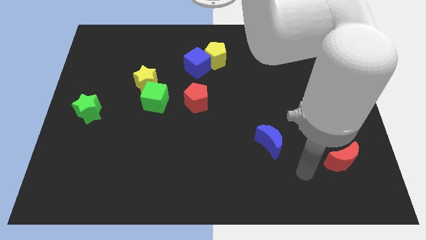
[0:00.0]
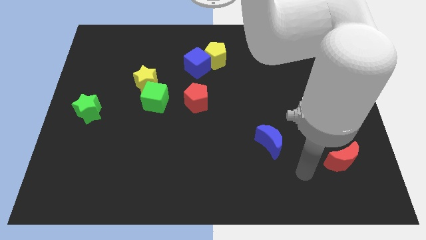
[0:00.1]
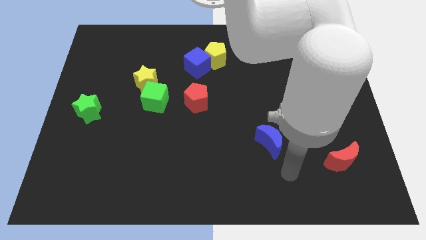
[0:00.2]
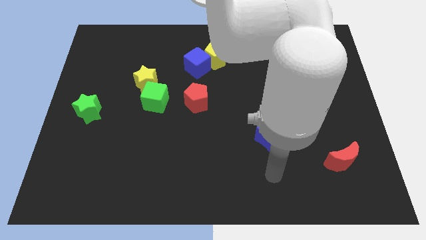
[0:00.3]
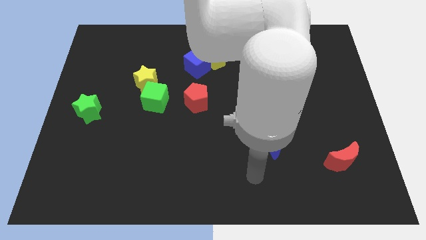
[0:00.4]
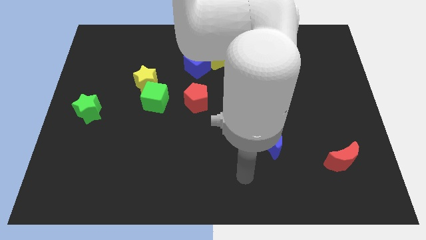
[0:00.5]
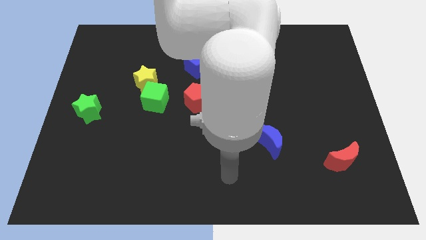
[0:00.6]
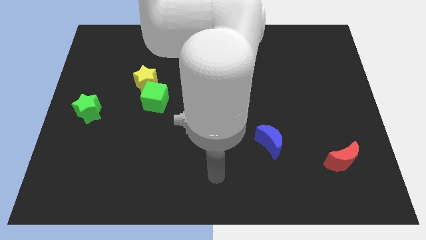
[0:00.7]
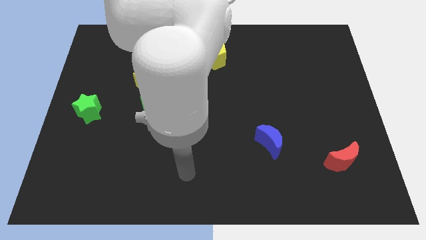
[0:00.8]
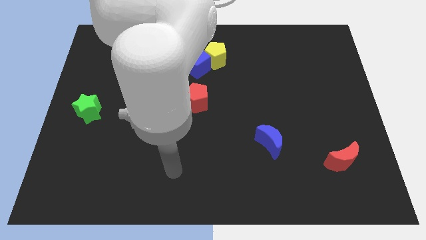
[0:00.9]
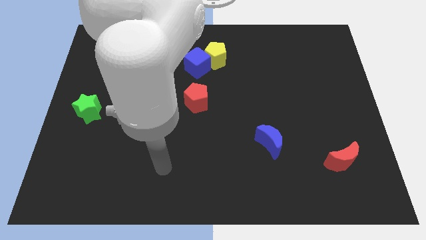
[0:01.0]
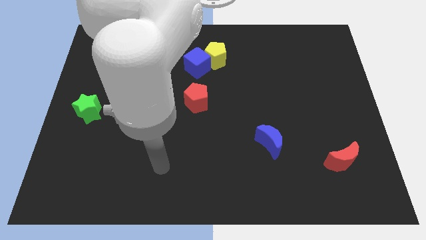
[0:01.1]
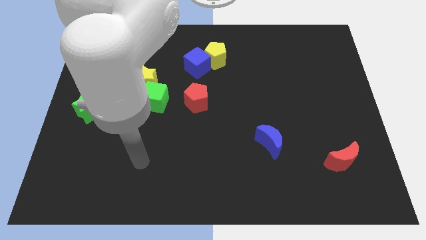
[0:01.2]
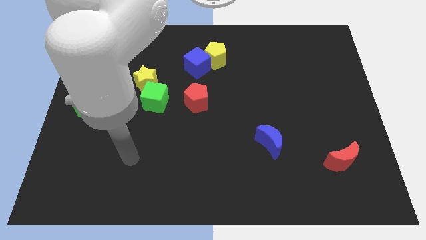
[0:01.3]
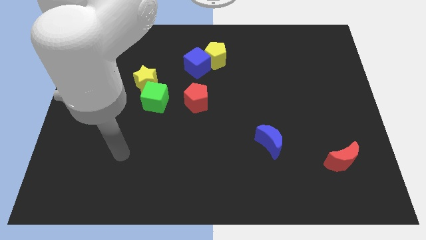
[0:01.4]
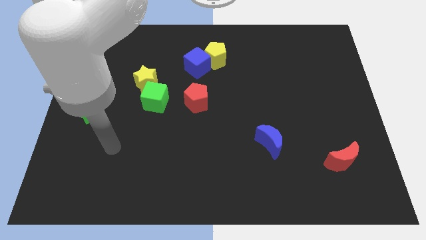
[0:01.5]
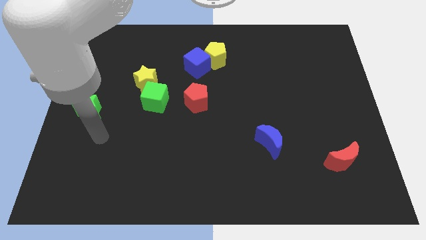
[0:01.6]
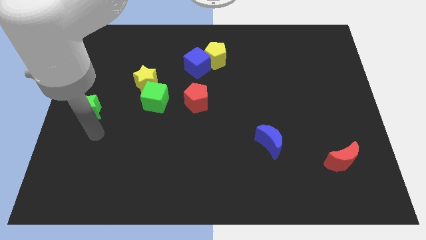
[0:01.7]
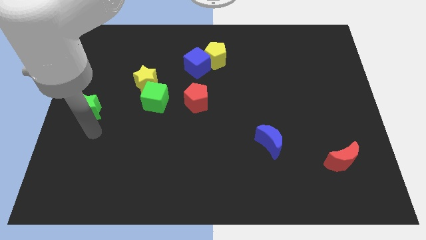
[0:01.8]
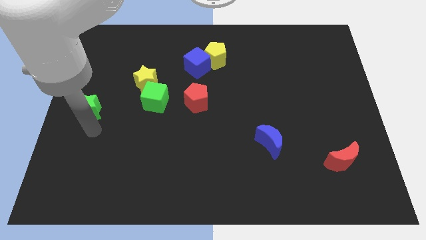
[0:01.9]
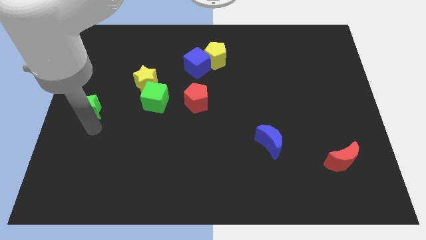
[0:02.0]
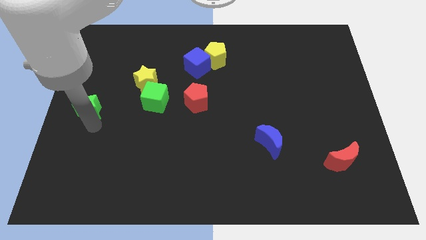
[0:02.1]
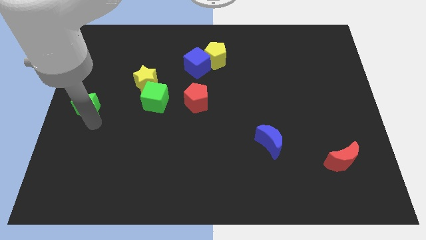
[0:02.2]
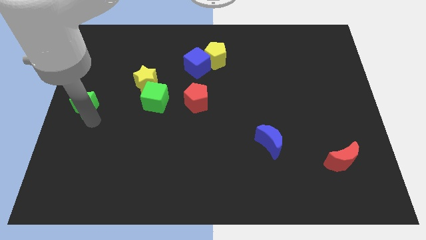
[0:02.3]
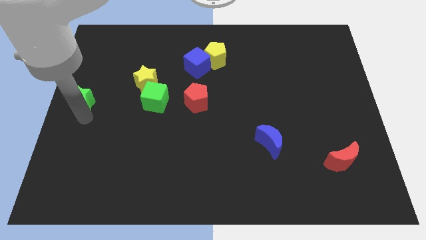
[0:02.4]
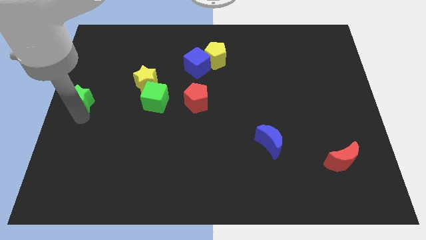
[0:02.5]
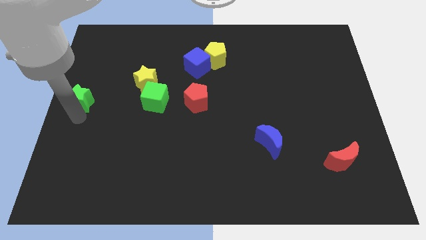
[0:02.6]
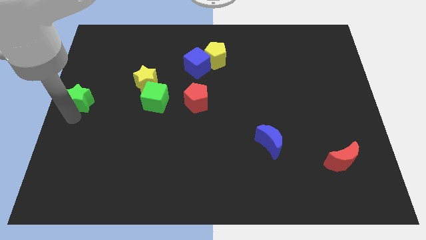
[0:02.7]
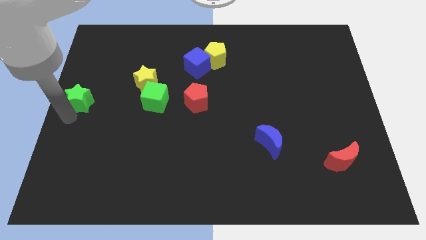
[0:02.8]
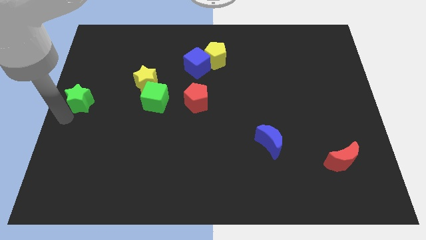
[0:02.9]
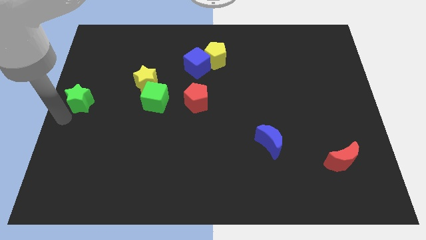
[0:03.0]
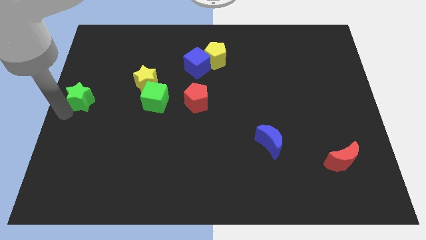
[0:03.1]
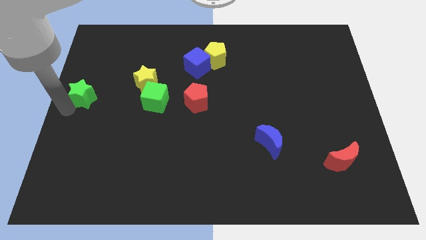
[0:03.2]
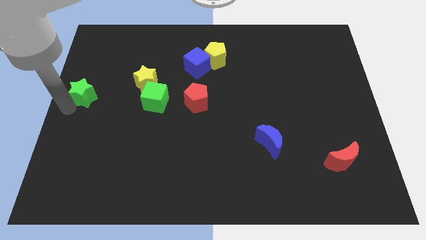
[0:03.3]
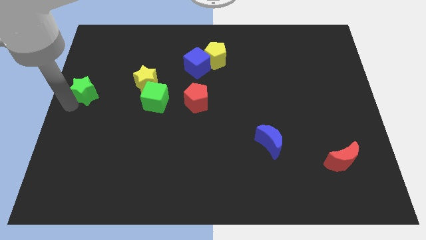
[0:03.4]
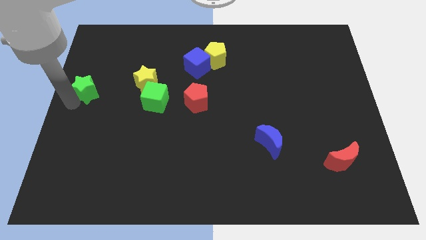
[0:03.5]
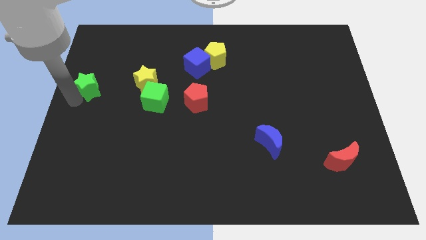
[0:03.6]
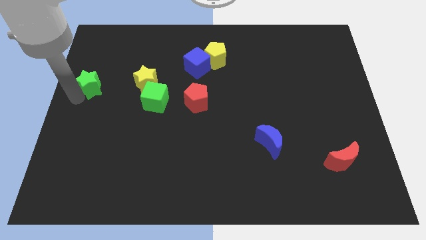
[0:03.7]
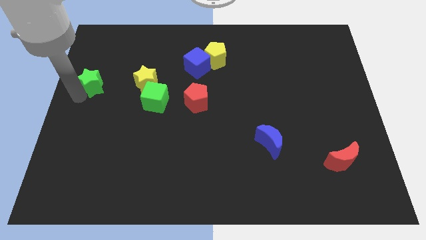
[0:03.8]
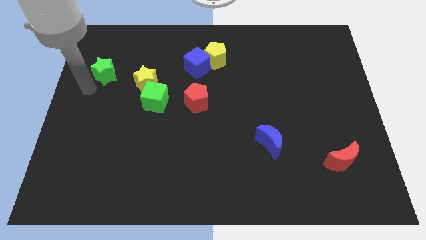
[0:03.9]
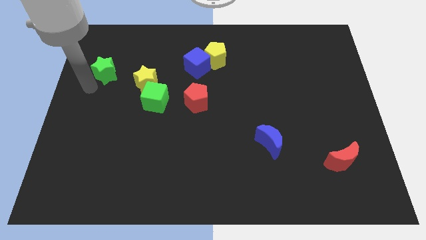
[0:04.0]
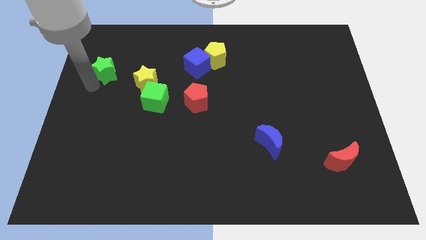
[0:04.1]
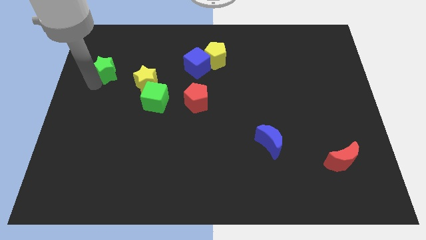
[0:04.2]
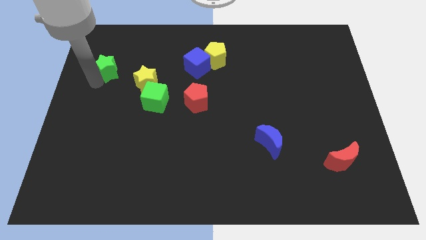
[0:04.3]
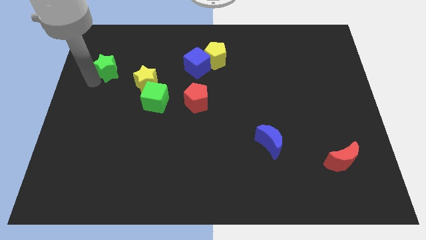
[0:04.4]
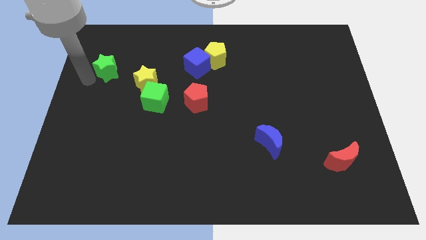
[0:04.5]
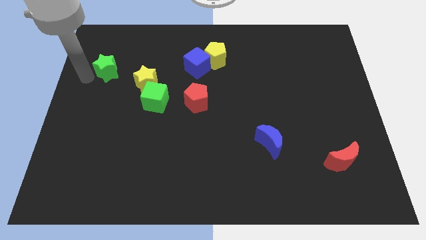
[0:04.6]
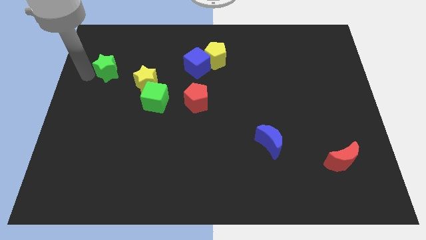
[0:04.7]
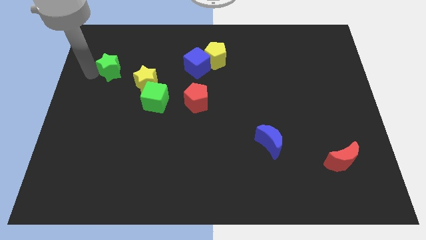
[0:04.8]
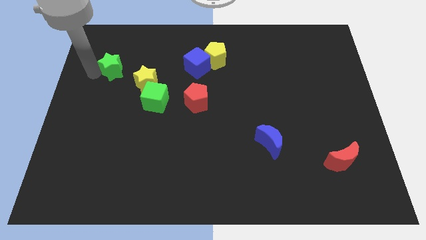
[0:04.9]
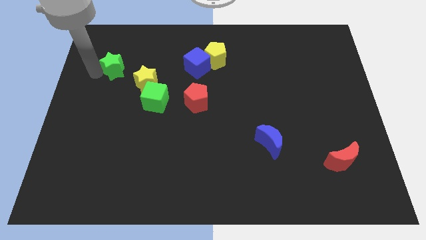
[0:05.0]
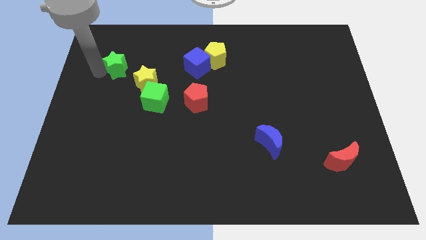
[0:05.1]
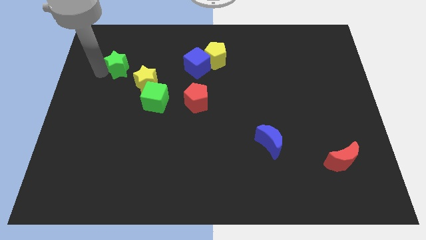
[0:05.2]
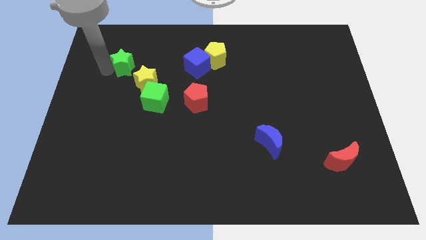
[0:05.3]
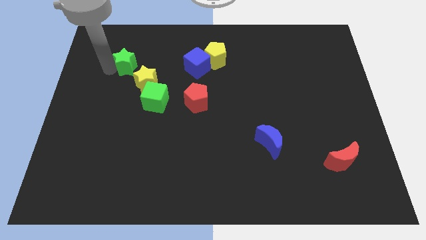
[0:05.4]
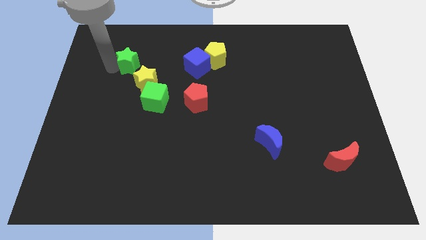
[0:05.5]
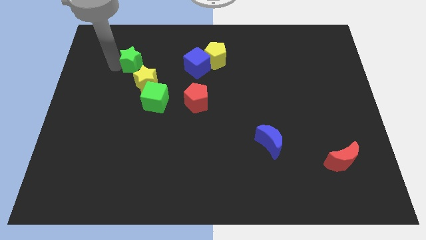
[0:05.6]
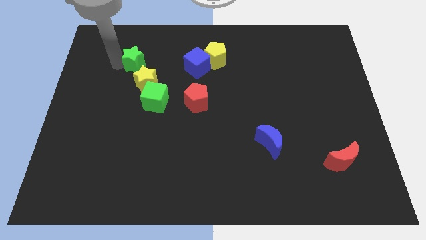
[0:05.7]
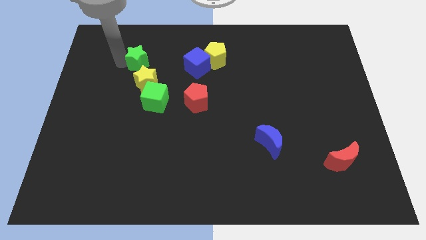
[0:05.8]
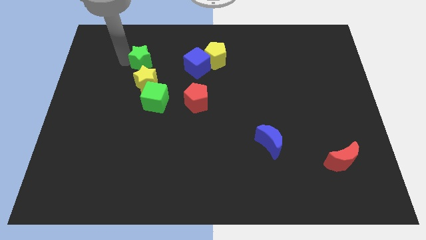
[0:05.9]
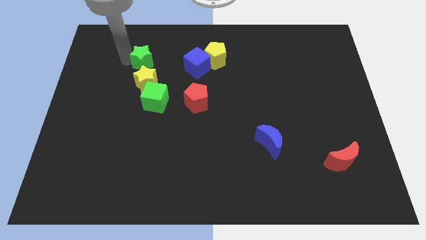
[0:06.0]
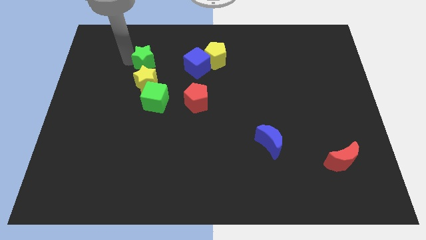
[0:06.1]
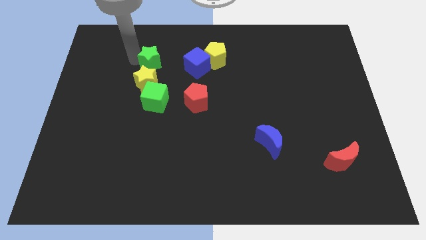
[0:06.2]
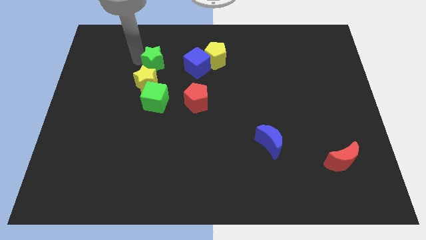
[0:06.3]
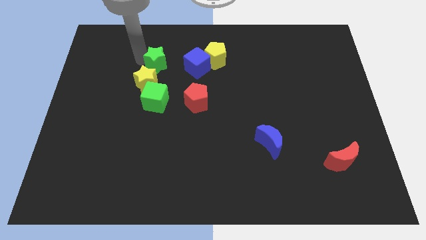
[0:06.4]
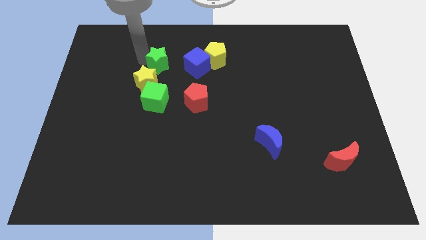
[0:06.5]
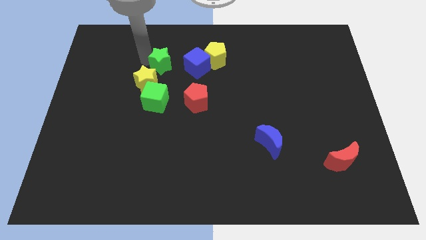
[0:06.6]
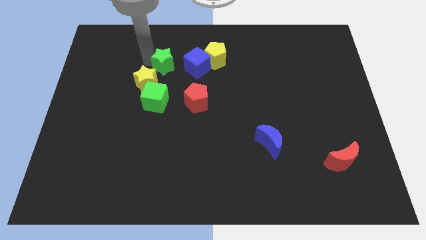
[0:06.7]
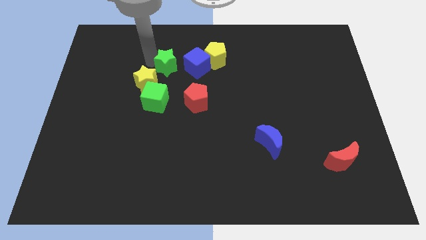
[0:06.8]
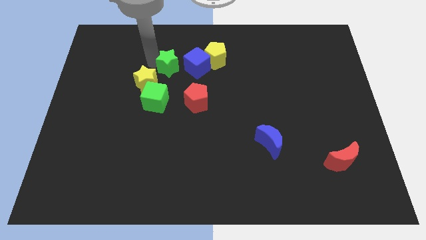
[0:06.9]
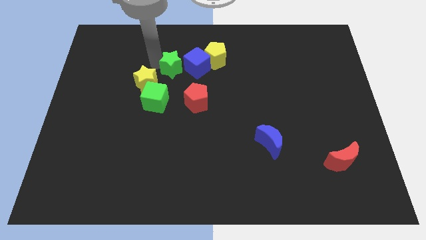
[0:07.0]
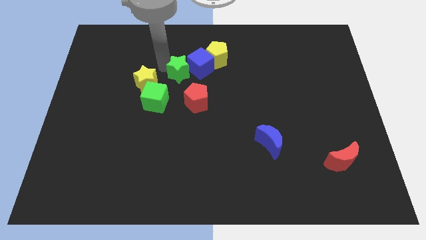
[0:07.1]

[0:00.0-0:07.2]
move the green star close to the blue cube

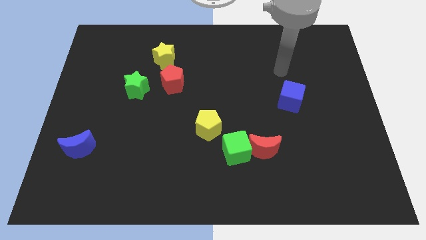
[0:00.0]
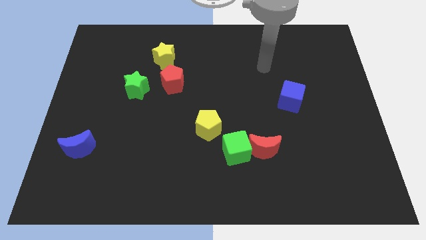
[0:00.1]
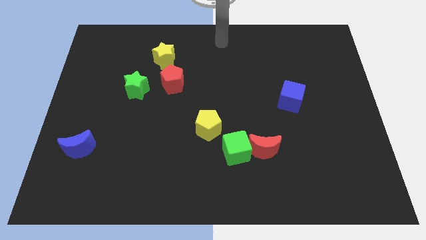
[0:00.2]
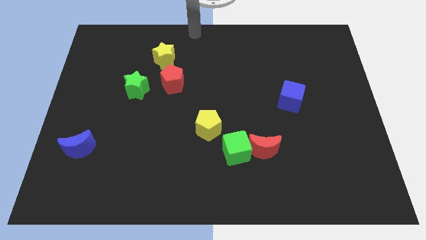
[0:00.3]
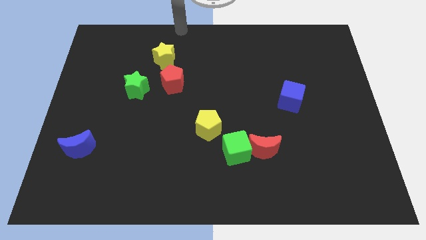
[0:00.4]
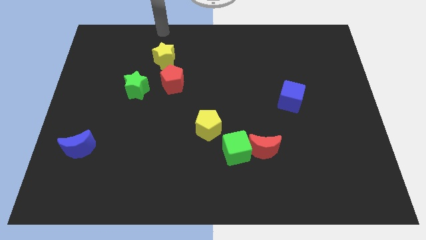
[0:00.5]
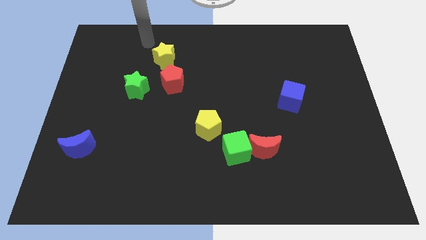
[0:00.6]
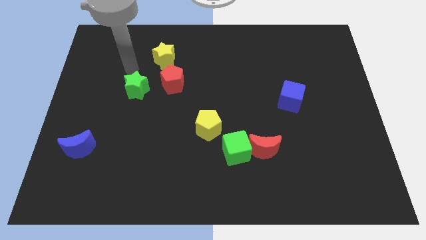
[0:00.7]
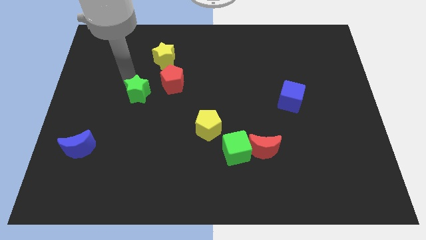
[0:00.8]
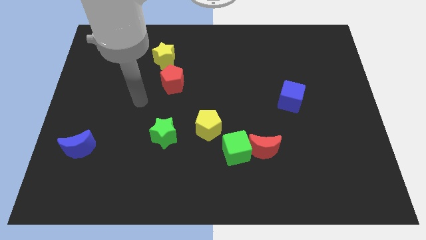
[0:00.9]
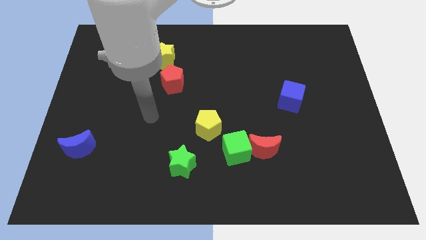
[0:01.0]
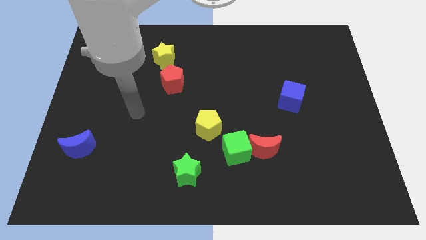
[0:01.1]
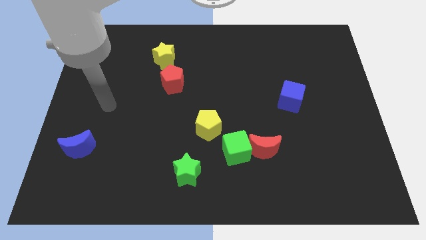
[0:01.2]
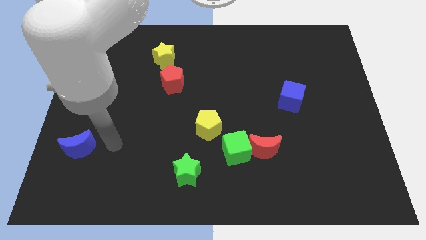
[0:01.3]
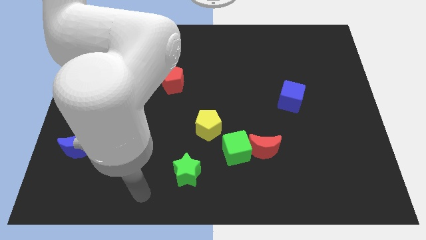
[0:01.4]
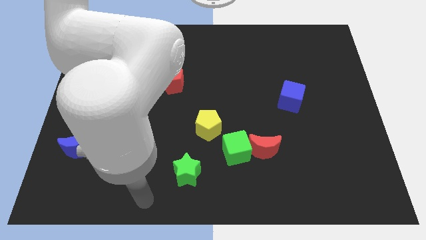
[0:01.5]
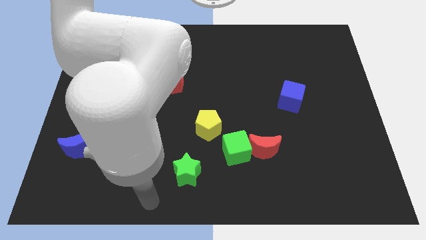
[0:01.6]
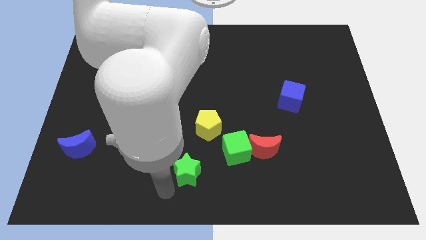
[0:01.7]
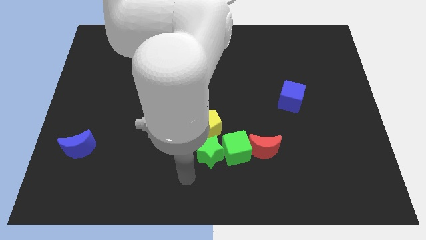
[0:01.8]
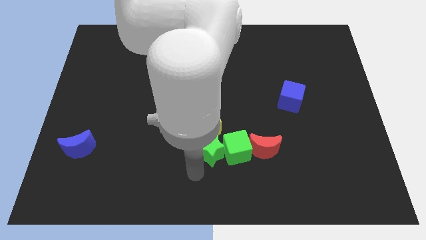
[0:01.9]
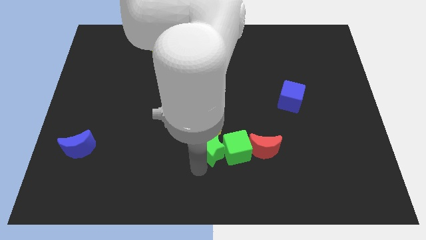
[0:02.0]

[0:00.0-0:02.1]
slide the green star towards the green cube
